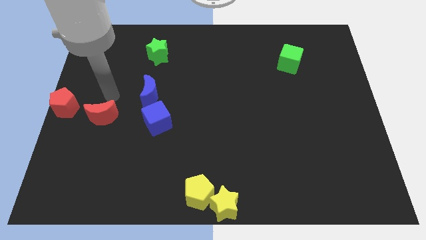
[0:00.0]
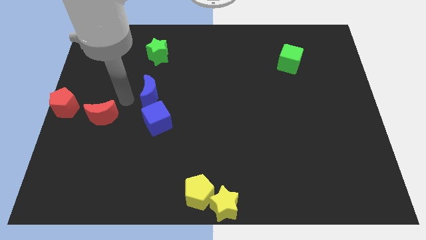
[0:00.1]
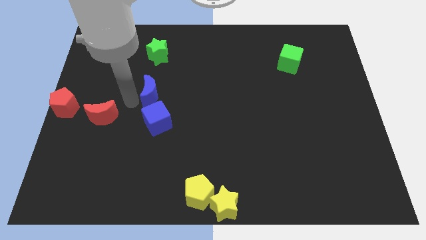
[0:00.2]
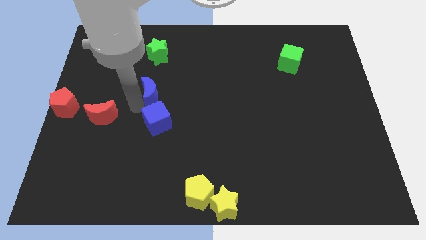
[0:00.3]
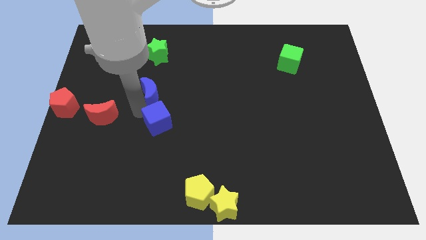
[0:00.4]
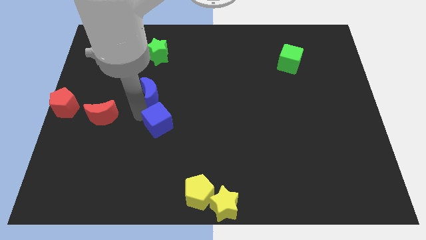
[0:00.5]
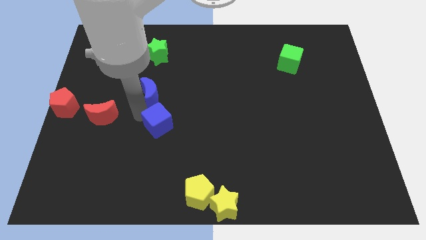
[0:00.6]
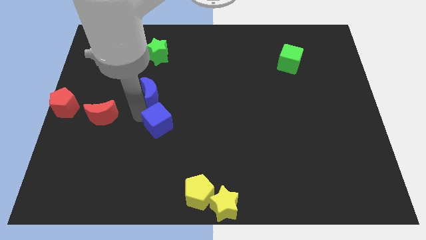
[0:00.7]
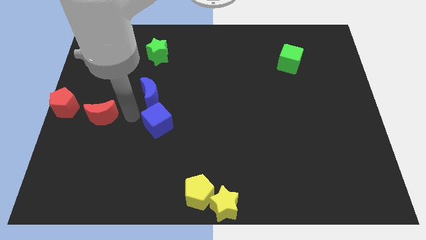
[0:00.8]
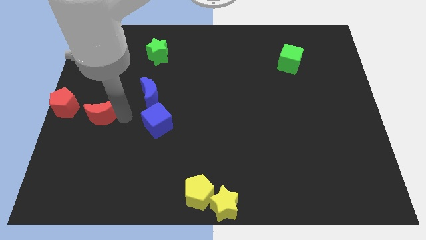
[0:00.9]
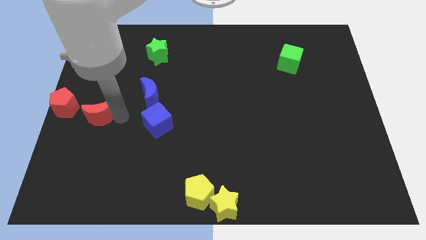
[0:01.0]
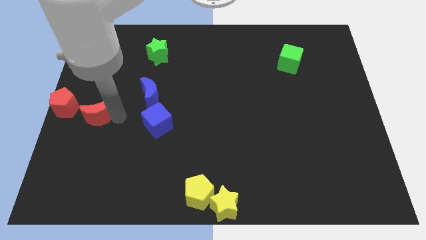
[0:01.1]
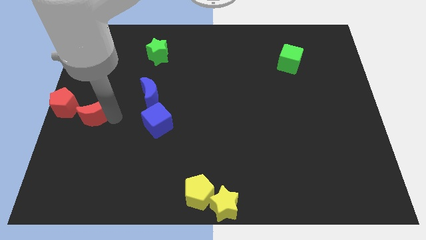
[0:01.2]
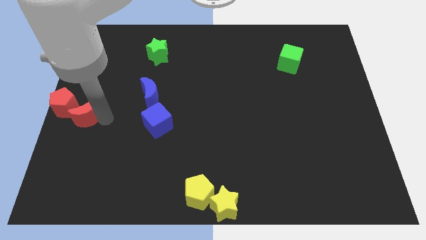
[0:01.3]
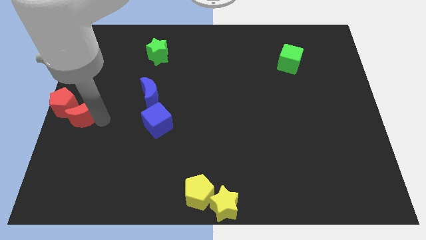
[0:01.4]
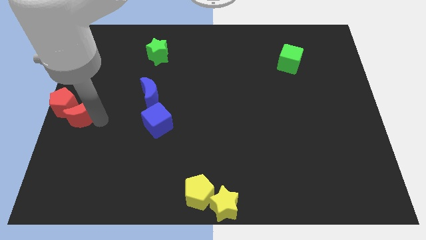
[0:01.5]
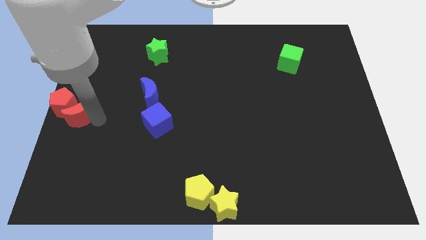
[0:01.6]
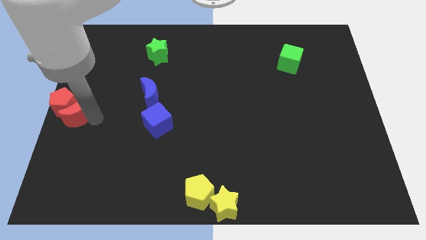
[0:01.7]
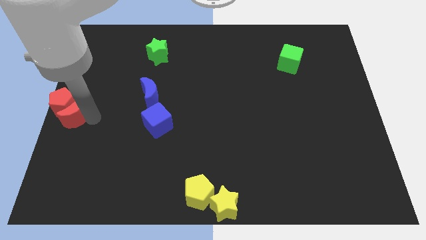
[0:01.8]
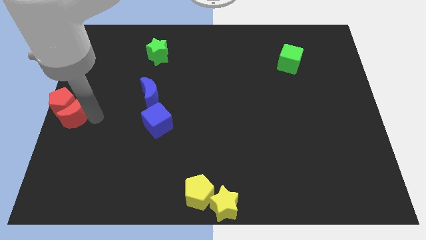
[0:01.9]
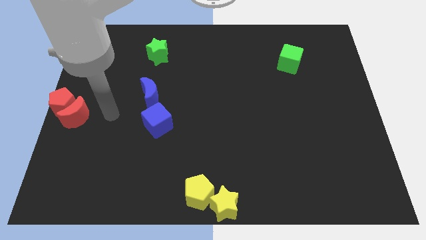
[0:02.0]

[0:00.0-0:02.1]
move the red moon to the bottom right side of the red pentagon

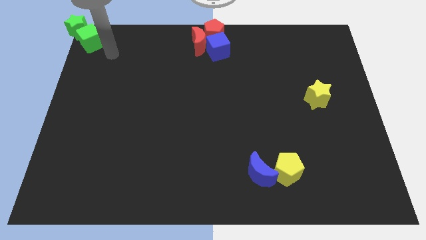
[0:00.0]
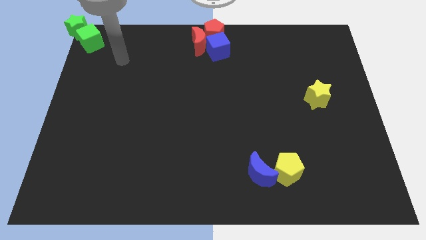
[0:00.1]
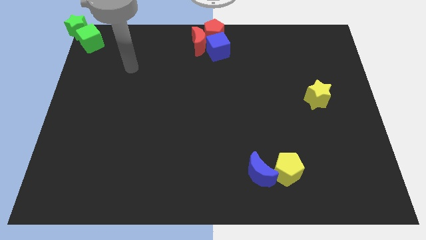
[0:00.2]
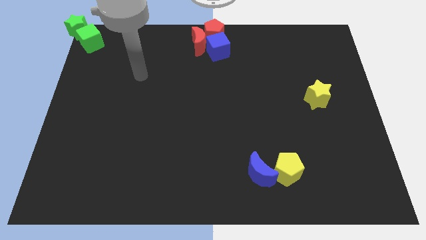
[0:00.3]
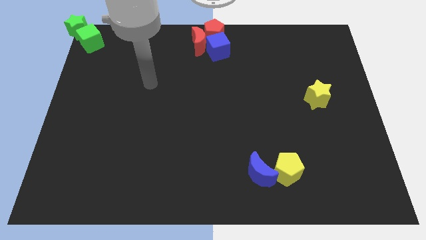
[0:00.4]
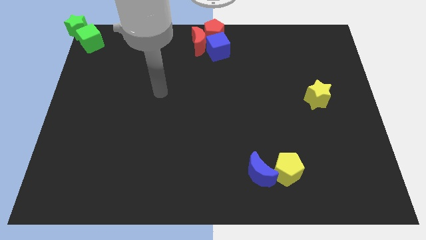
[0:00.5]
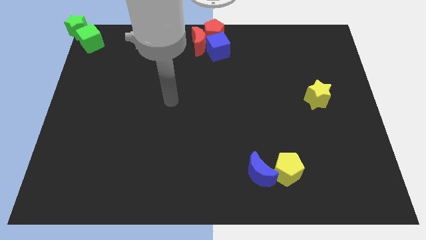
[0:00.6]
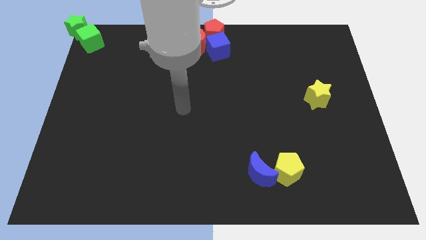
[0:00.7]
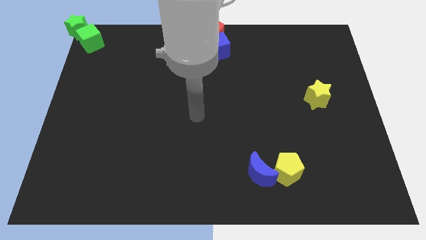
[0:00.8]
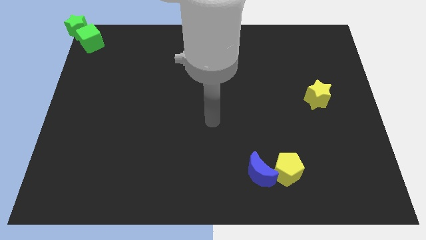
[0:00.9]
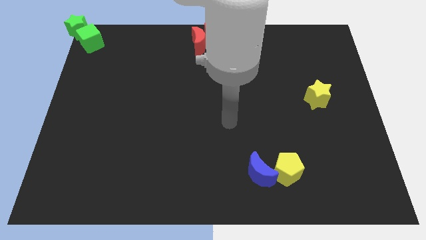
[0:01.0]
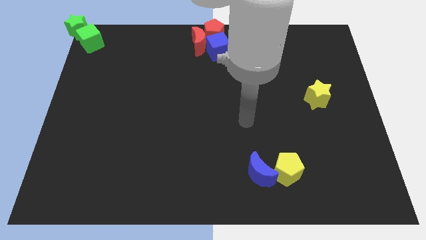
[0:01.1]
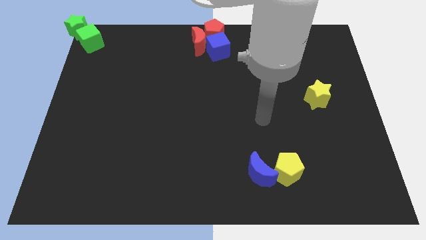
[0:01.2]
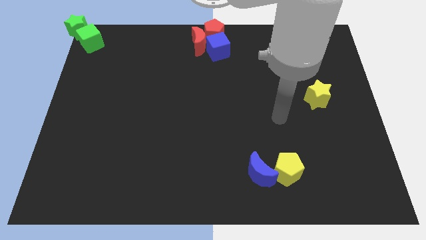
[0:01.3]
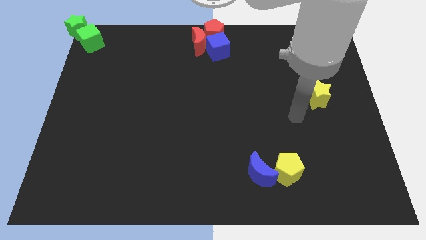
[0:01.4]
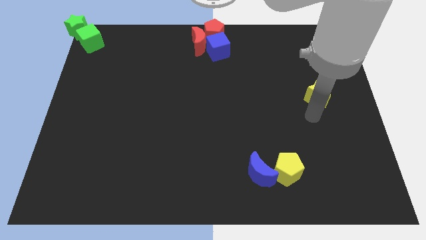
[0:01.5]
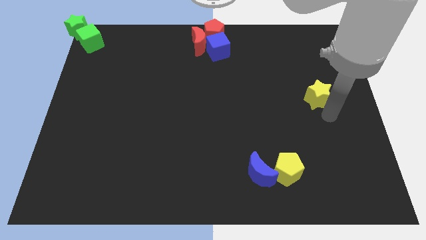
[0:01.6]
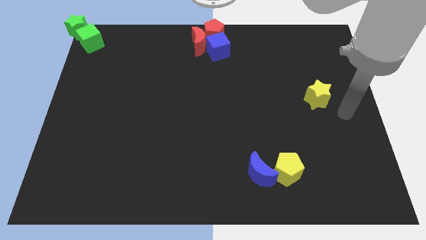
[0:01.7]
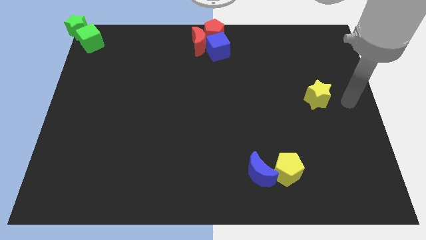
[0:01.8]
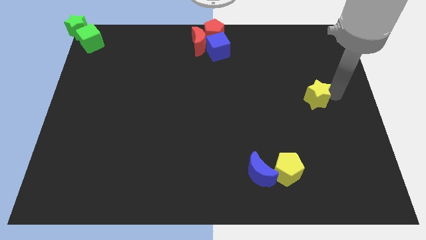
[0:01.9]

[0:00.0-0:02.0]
place your hand at the right side of the yellow star

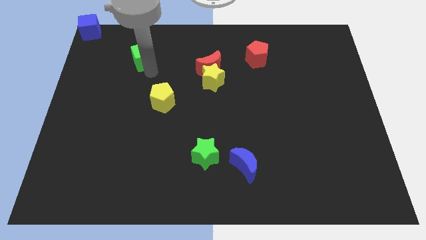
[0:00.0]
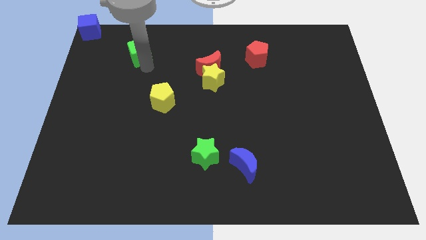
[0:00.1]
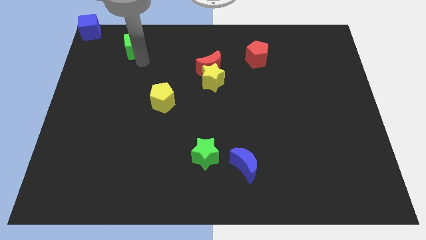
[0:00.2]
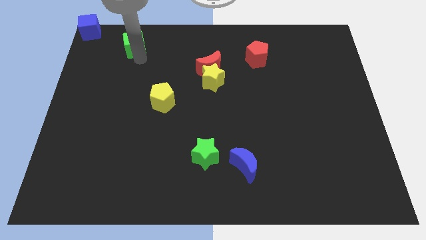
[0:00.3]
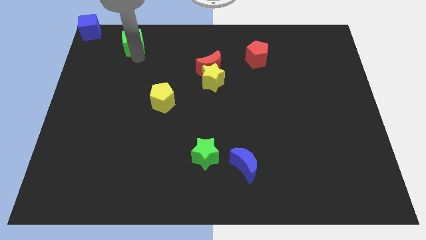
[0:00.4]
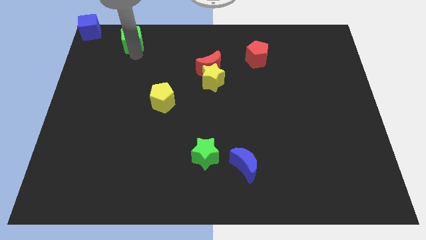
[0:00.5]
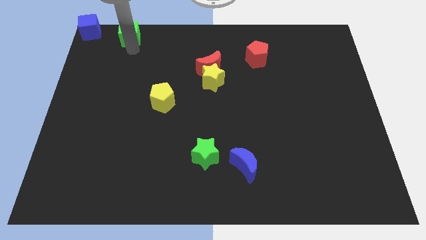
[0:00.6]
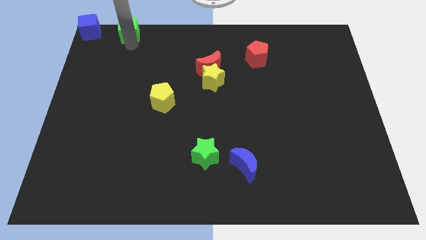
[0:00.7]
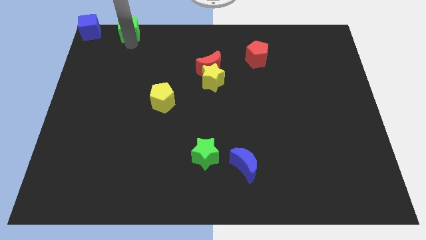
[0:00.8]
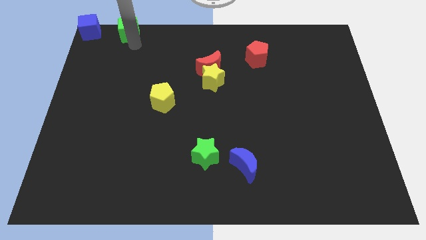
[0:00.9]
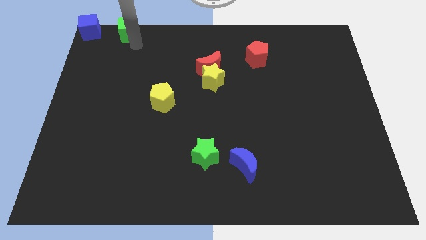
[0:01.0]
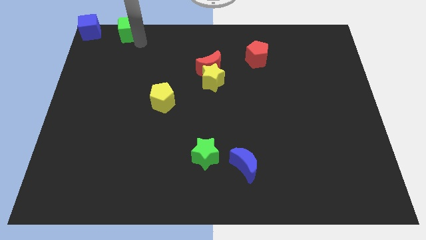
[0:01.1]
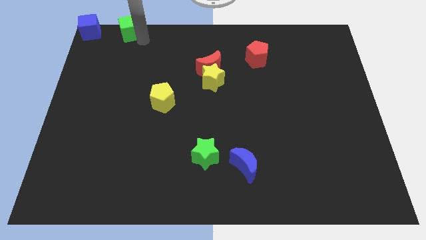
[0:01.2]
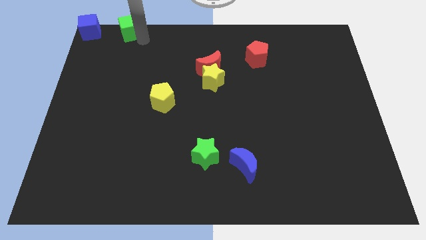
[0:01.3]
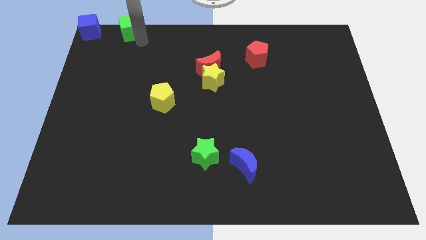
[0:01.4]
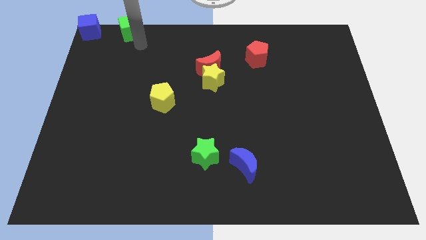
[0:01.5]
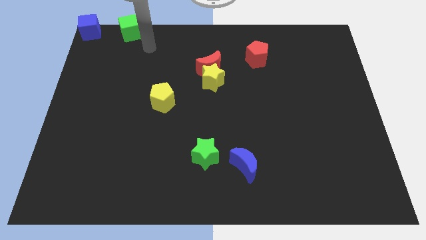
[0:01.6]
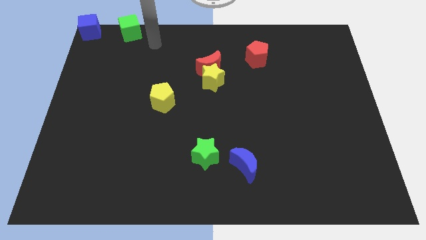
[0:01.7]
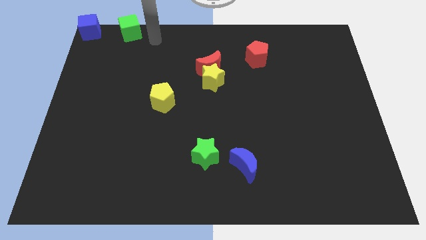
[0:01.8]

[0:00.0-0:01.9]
put the green cube right to the blue cube

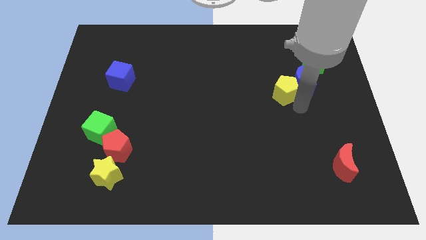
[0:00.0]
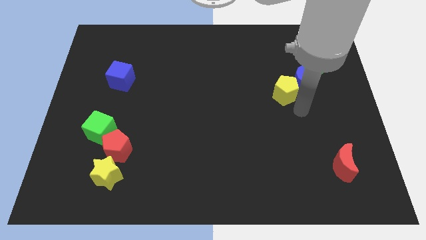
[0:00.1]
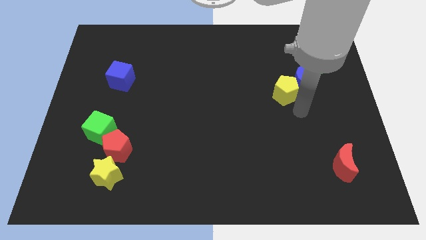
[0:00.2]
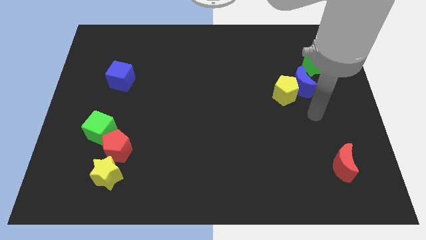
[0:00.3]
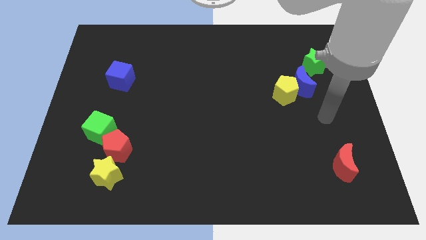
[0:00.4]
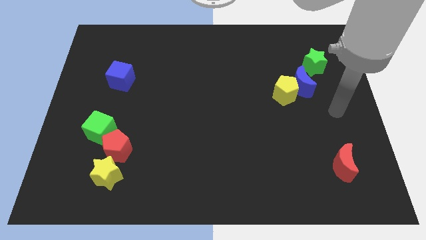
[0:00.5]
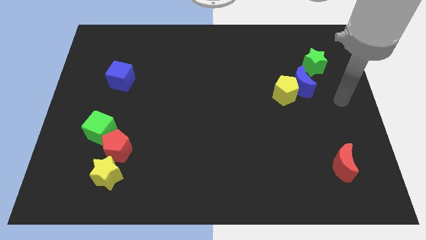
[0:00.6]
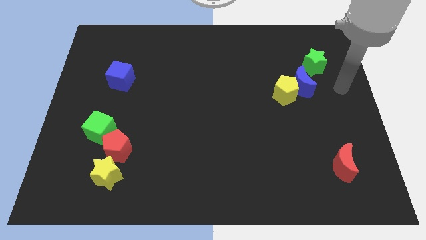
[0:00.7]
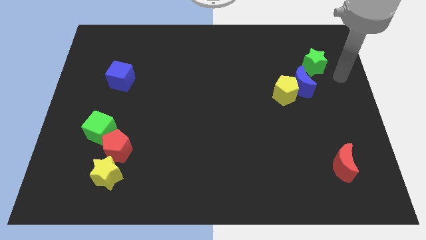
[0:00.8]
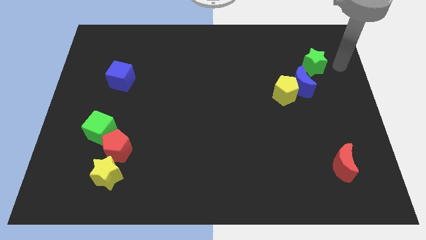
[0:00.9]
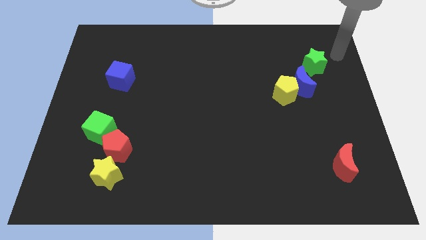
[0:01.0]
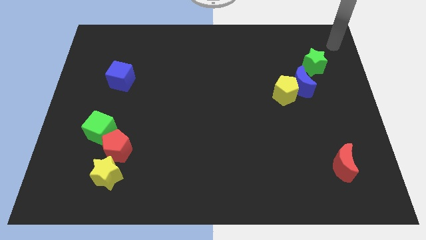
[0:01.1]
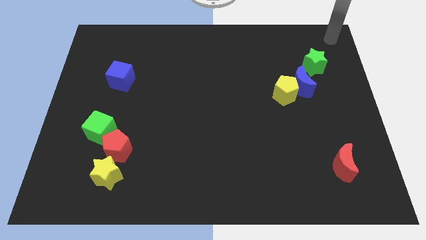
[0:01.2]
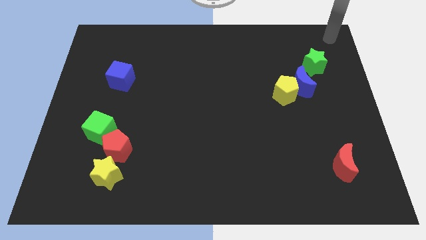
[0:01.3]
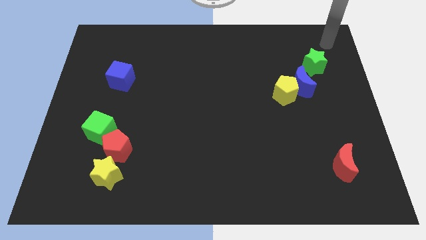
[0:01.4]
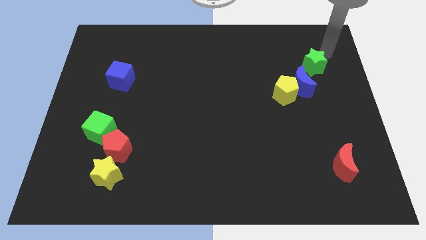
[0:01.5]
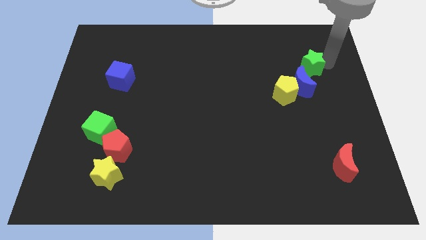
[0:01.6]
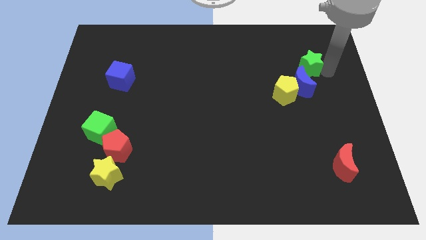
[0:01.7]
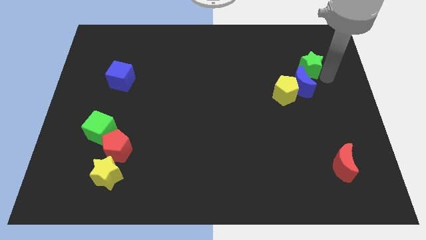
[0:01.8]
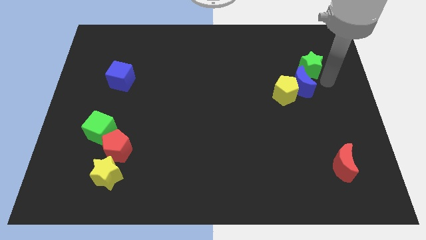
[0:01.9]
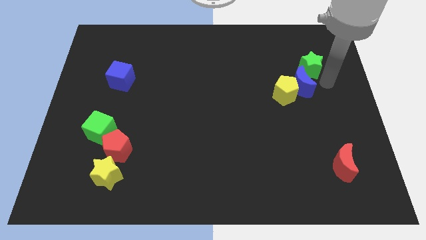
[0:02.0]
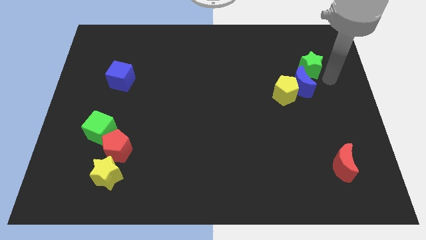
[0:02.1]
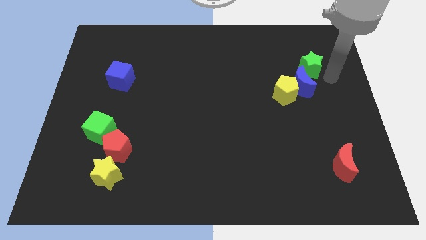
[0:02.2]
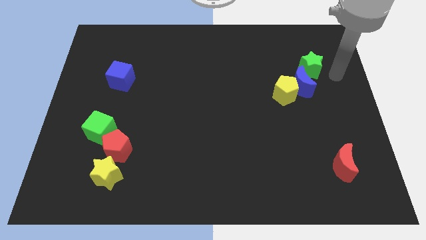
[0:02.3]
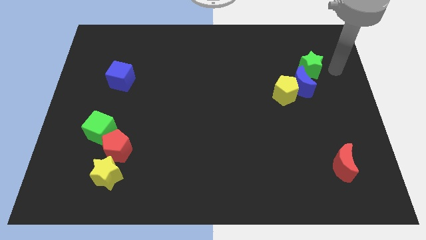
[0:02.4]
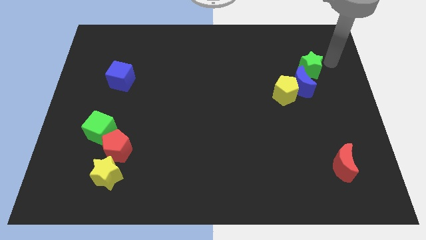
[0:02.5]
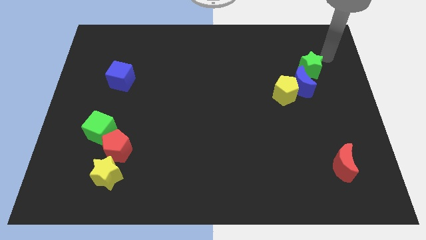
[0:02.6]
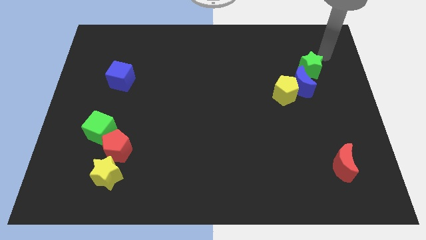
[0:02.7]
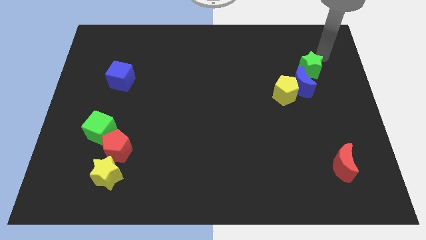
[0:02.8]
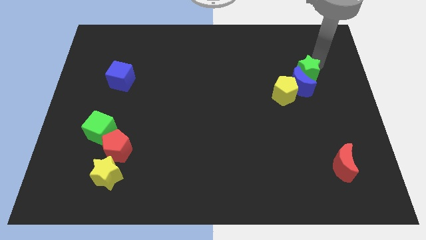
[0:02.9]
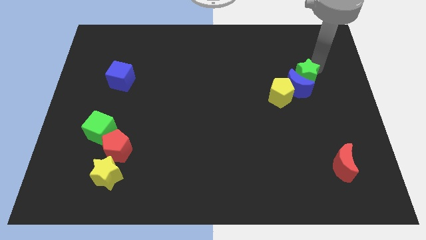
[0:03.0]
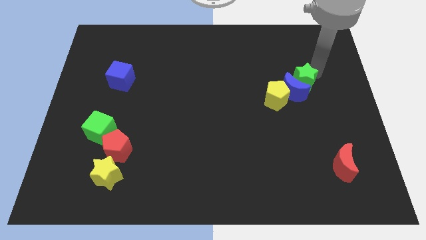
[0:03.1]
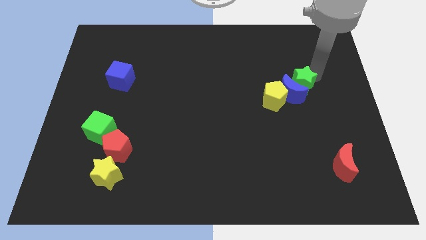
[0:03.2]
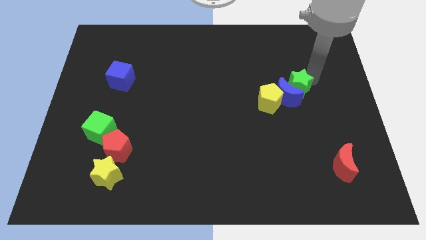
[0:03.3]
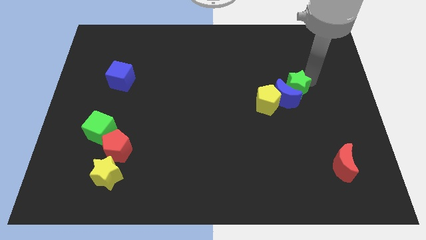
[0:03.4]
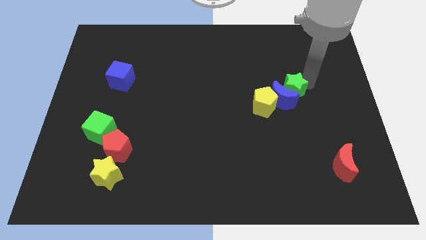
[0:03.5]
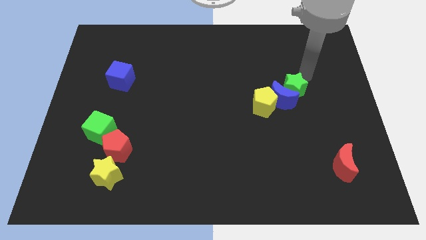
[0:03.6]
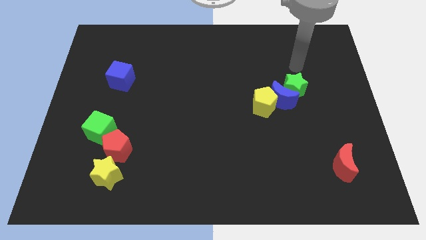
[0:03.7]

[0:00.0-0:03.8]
push the diagonal line of blocks towards the center of the board
